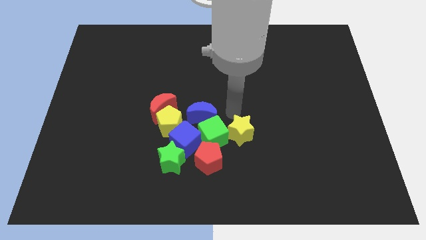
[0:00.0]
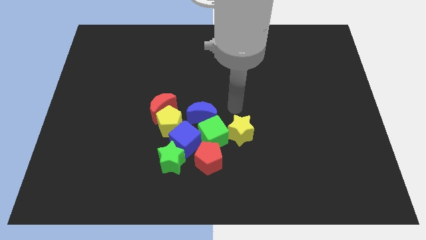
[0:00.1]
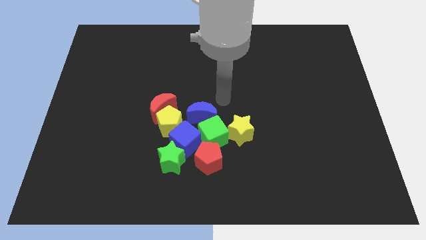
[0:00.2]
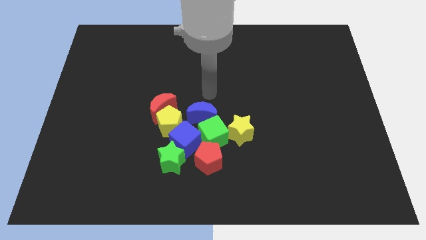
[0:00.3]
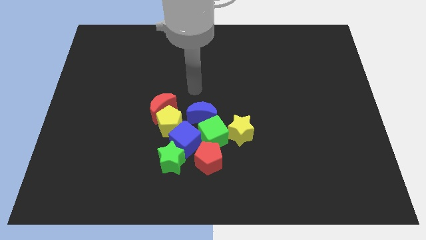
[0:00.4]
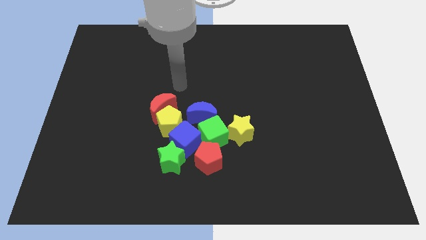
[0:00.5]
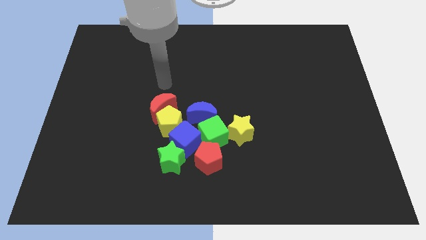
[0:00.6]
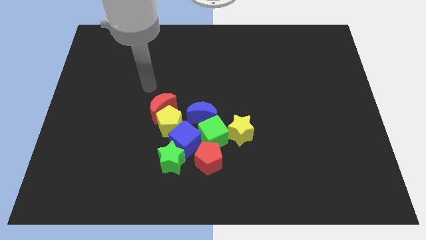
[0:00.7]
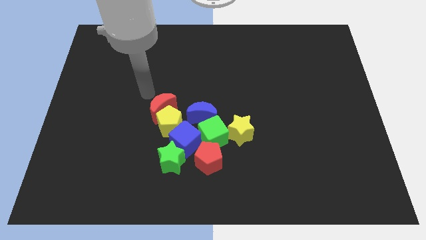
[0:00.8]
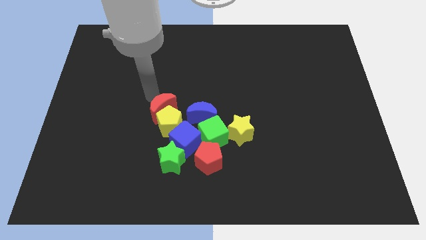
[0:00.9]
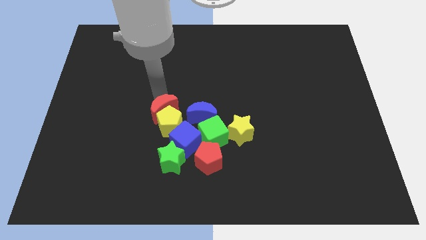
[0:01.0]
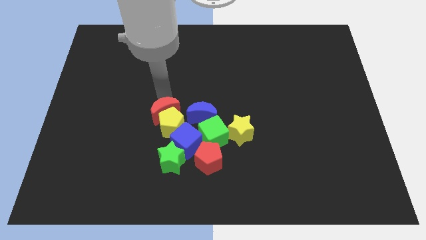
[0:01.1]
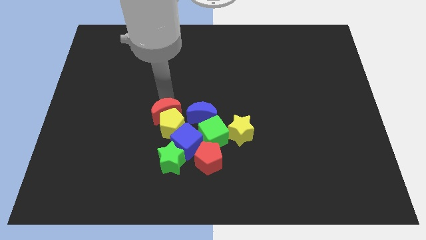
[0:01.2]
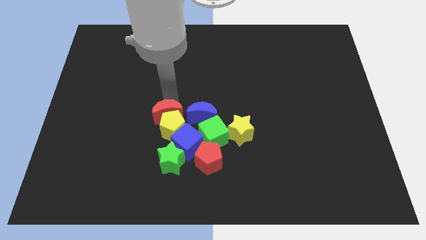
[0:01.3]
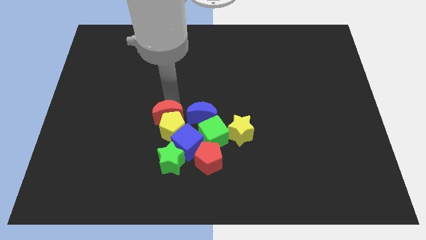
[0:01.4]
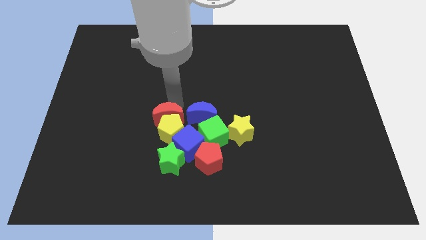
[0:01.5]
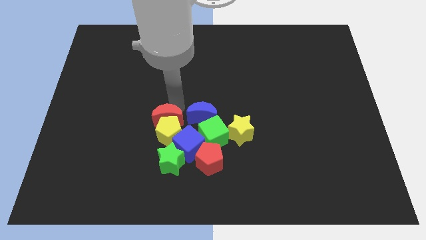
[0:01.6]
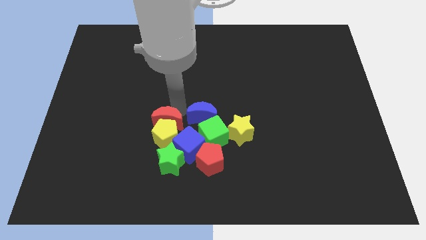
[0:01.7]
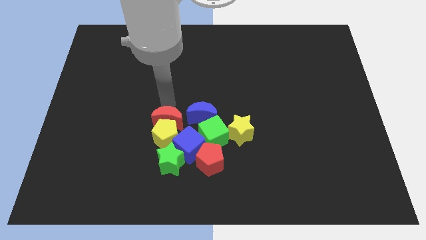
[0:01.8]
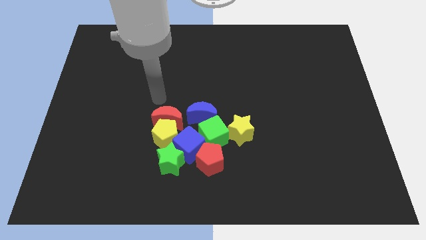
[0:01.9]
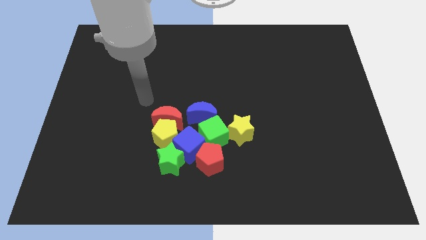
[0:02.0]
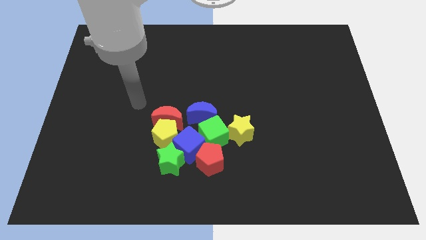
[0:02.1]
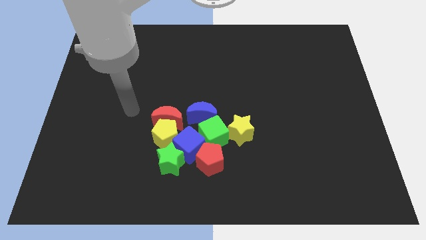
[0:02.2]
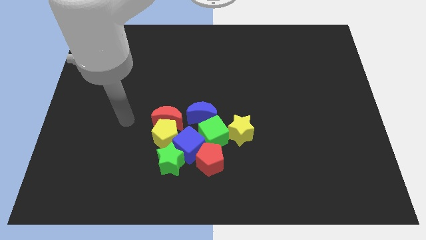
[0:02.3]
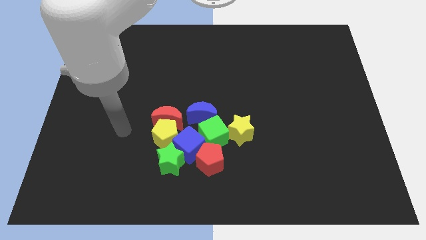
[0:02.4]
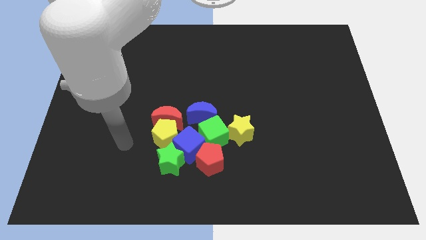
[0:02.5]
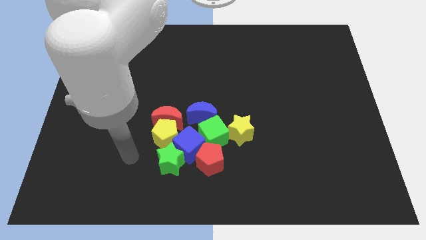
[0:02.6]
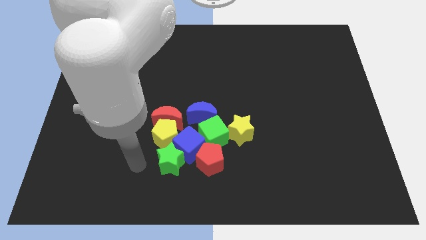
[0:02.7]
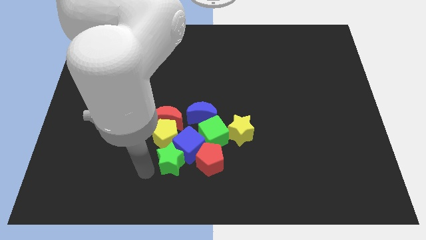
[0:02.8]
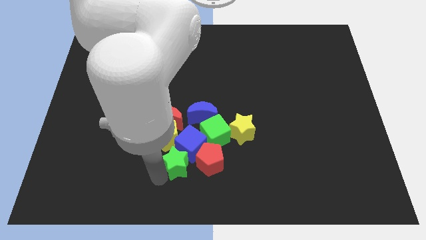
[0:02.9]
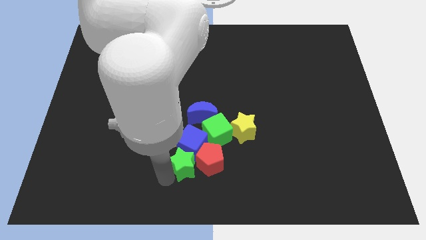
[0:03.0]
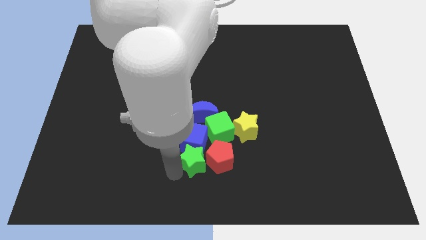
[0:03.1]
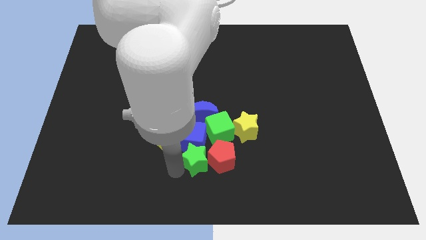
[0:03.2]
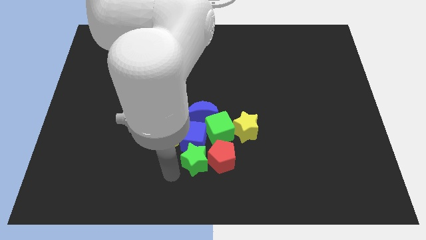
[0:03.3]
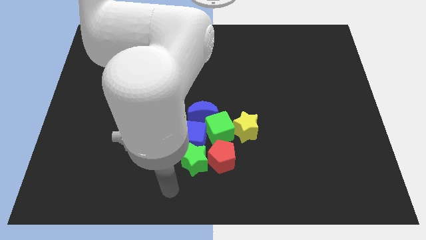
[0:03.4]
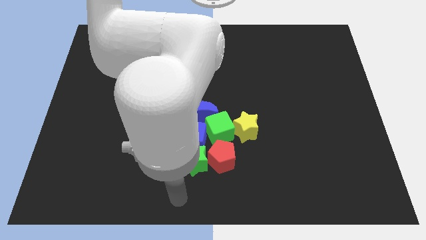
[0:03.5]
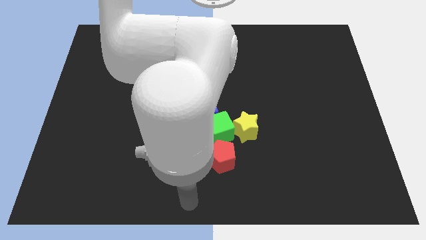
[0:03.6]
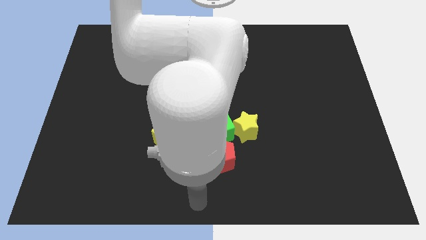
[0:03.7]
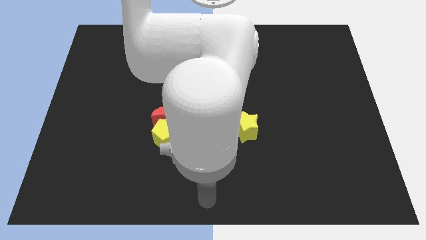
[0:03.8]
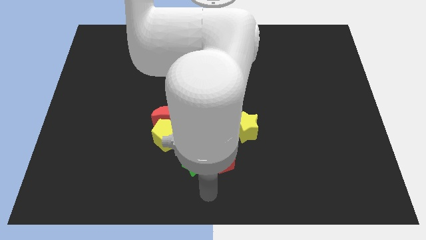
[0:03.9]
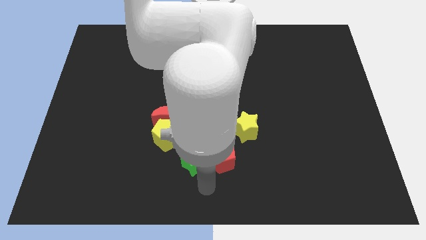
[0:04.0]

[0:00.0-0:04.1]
adjust the group of blocks at the bottom side of the table

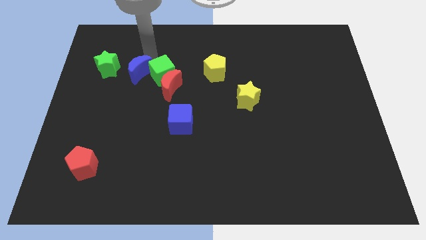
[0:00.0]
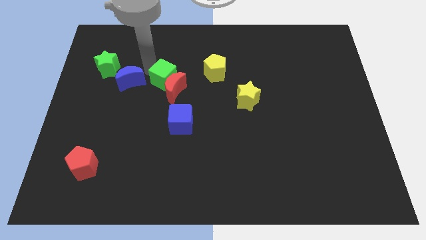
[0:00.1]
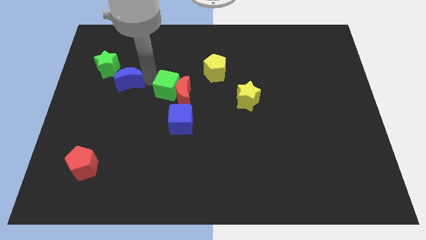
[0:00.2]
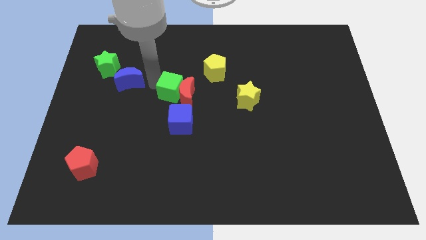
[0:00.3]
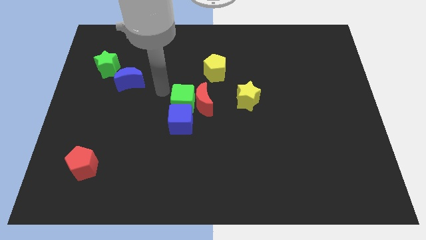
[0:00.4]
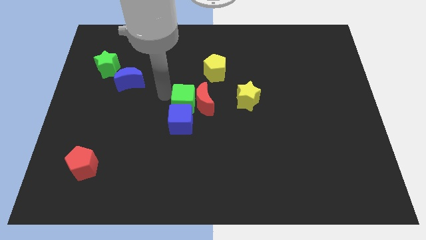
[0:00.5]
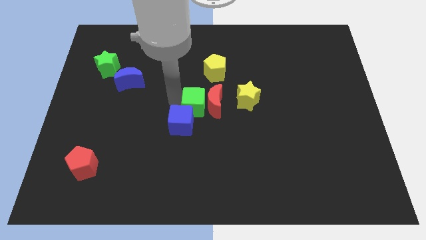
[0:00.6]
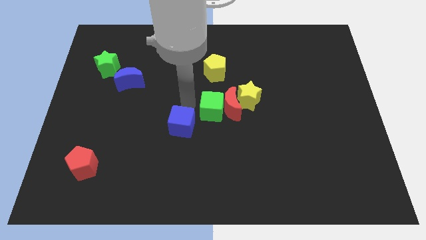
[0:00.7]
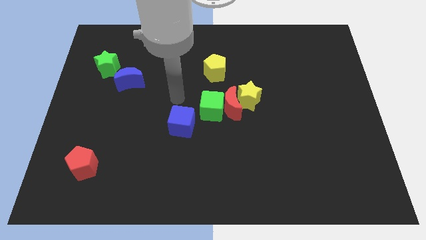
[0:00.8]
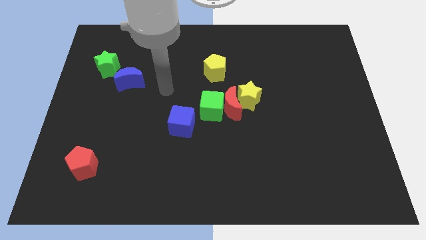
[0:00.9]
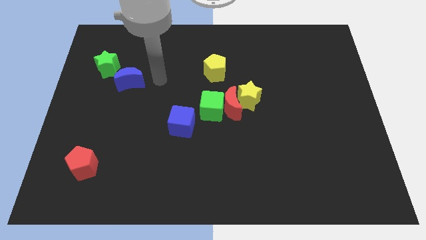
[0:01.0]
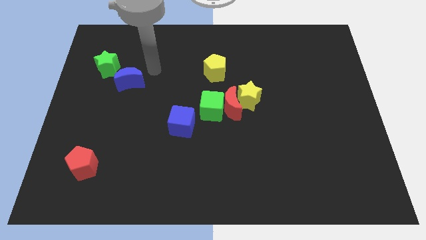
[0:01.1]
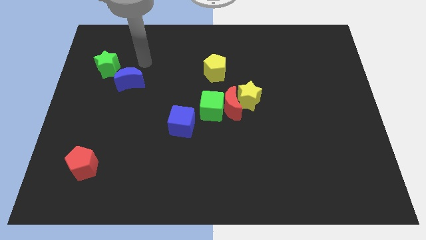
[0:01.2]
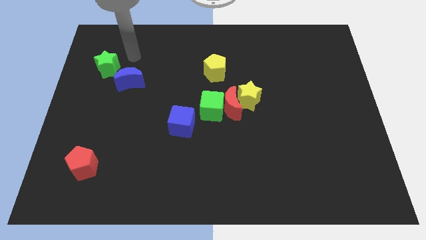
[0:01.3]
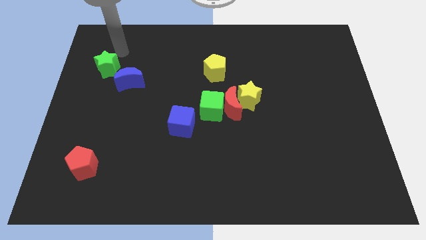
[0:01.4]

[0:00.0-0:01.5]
push the green cube and the red moon into the yellow star

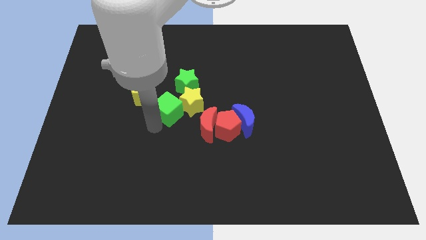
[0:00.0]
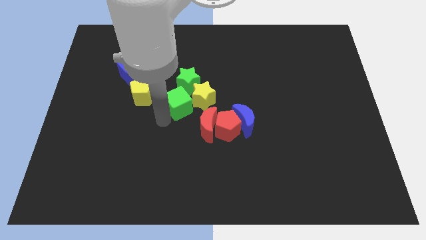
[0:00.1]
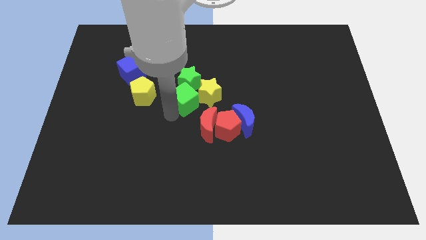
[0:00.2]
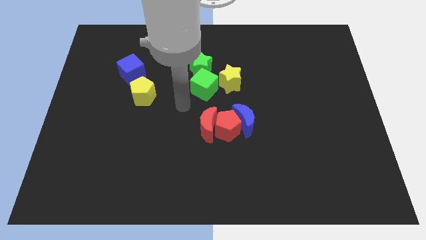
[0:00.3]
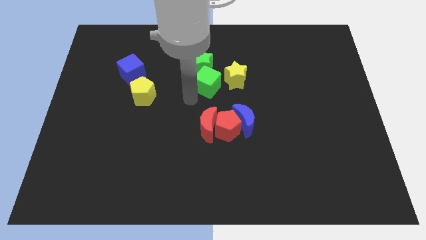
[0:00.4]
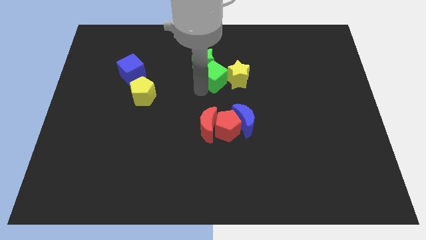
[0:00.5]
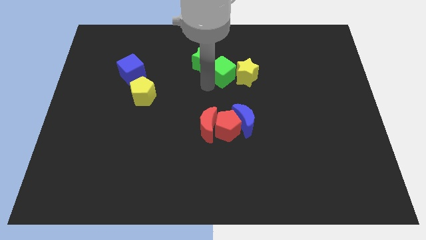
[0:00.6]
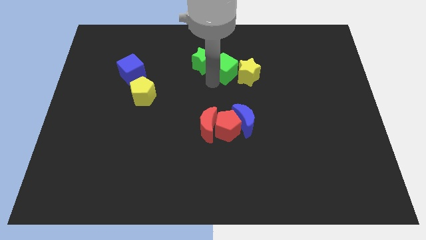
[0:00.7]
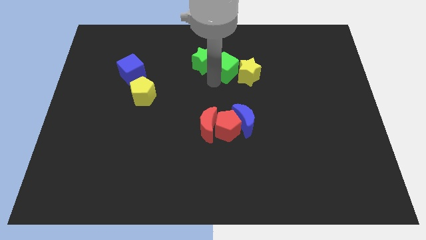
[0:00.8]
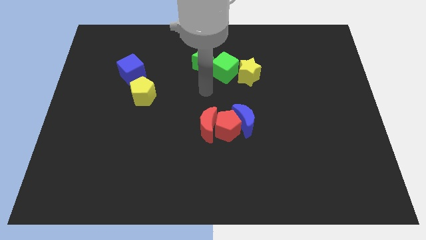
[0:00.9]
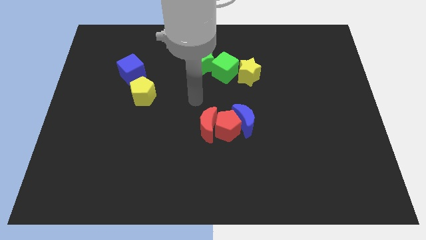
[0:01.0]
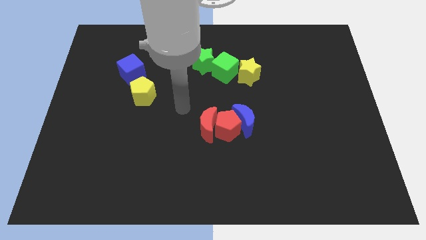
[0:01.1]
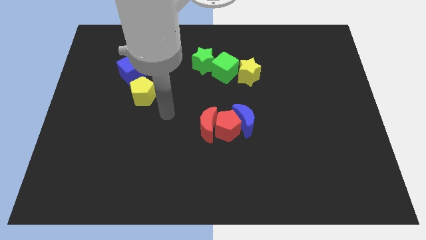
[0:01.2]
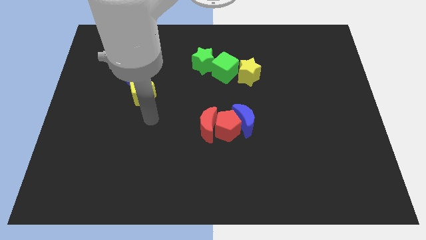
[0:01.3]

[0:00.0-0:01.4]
place green cube to the right of green star

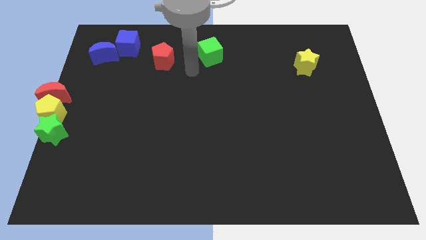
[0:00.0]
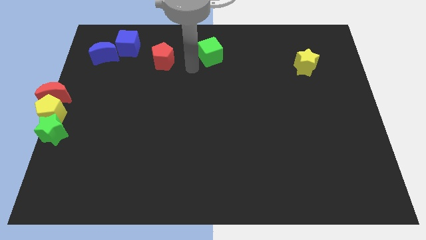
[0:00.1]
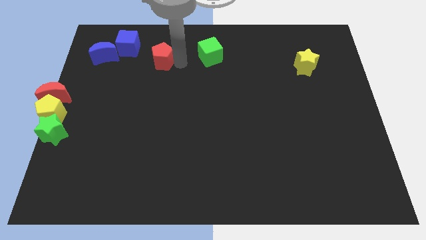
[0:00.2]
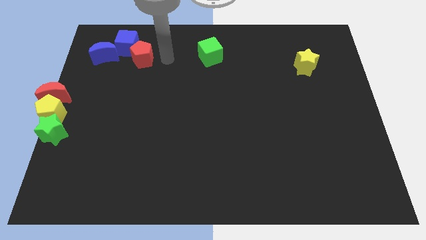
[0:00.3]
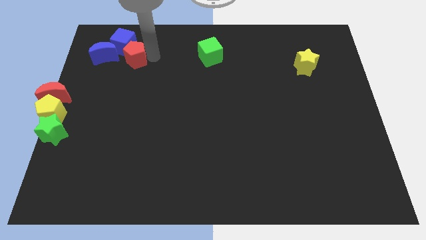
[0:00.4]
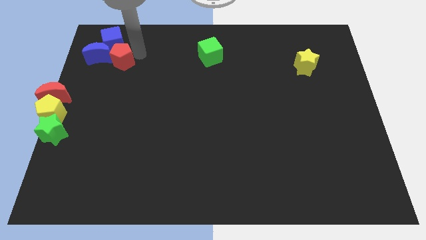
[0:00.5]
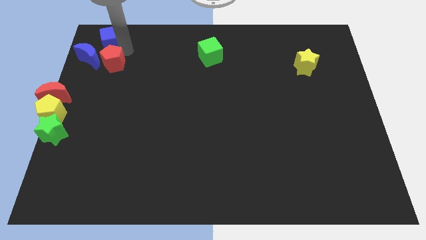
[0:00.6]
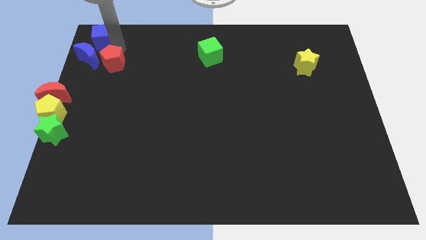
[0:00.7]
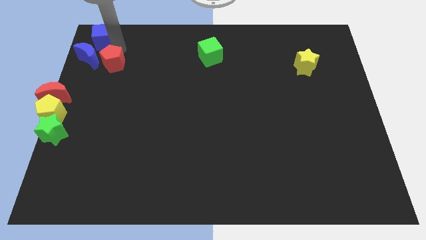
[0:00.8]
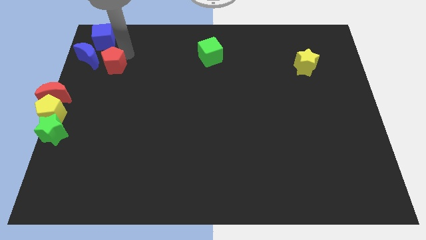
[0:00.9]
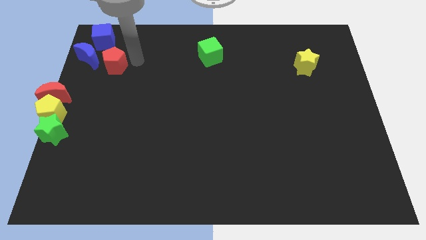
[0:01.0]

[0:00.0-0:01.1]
push the red pentagon into the blue cube

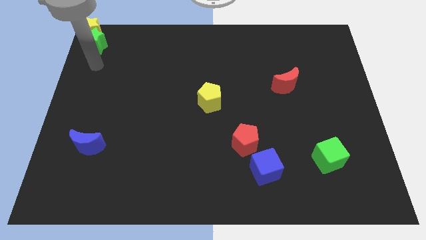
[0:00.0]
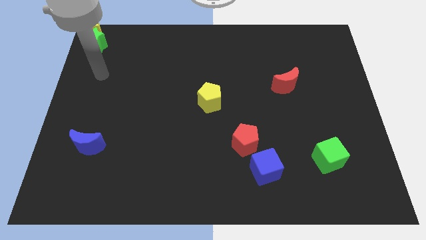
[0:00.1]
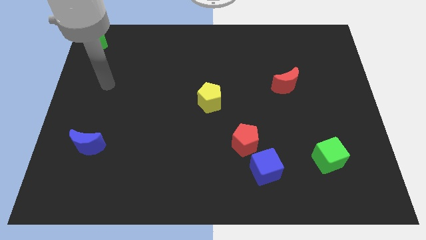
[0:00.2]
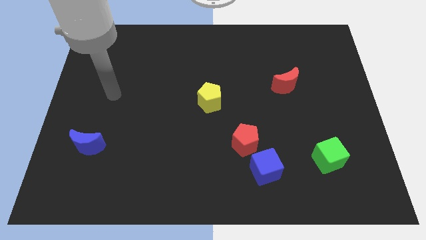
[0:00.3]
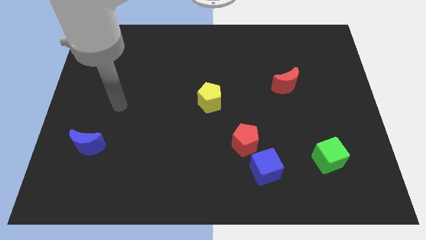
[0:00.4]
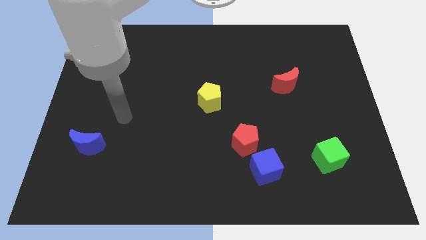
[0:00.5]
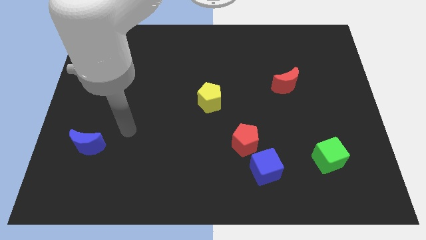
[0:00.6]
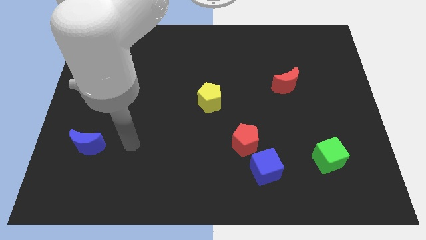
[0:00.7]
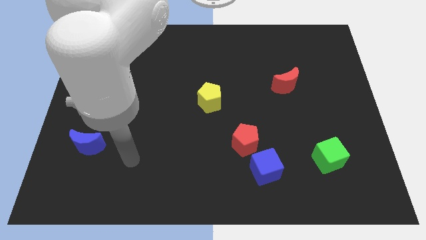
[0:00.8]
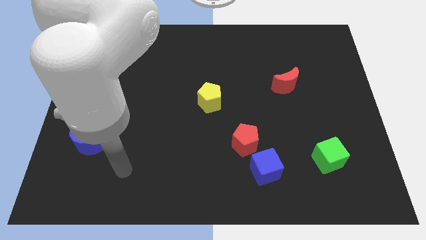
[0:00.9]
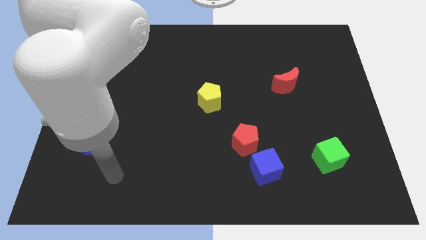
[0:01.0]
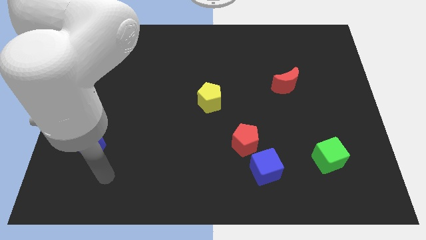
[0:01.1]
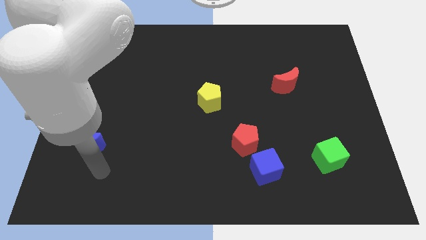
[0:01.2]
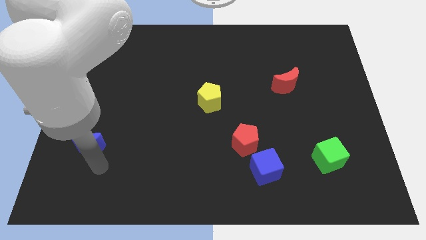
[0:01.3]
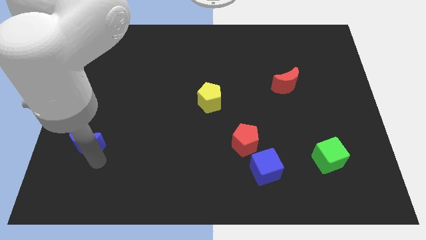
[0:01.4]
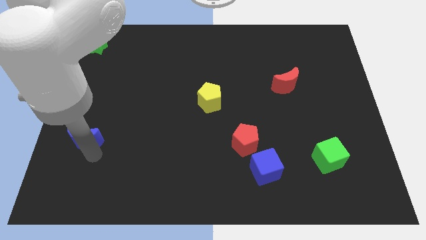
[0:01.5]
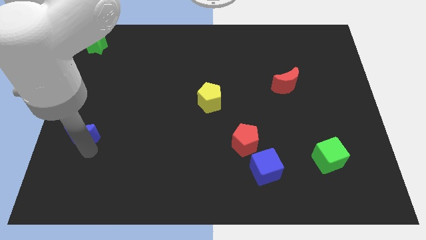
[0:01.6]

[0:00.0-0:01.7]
touch the bottom side of the blue crescent
